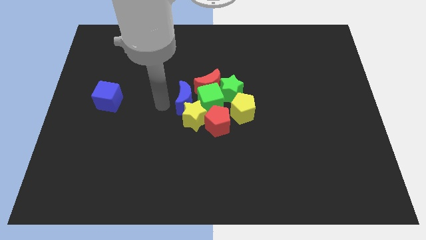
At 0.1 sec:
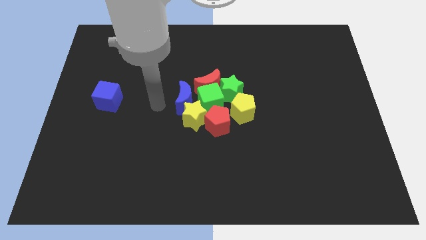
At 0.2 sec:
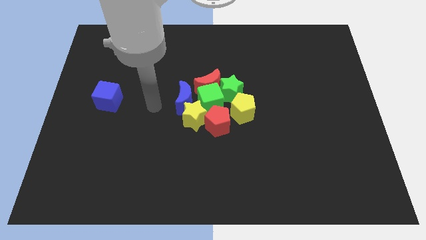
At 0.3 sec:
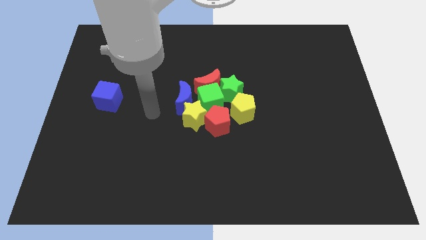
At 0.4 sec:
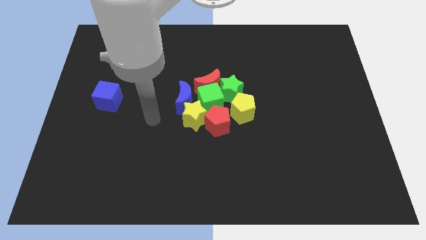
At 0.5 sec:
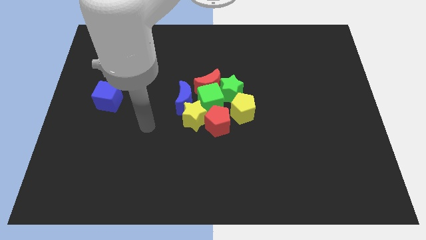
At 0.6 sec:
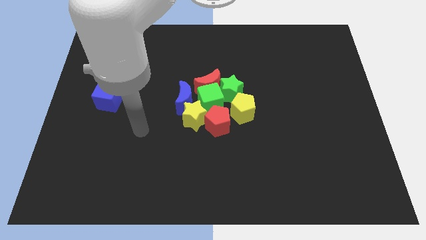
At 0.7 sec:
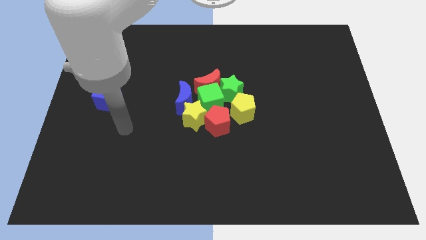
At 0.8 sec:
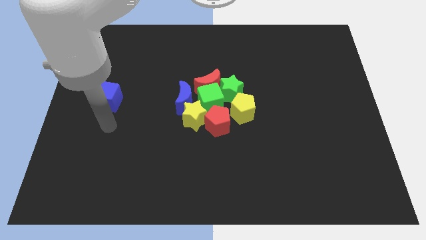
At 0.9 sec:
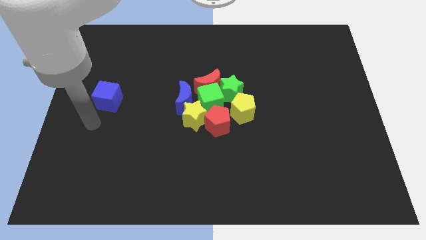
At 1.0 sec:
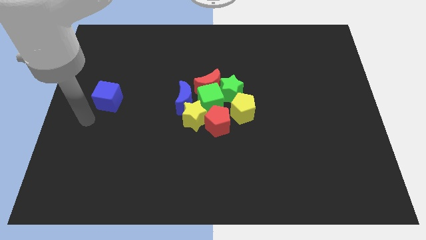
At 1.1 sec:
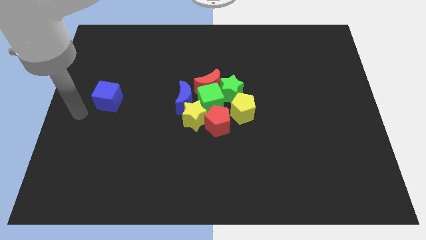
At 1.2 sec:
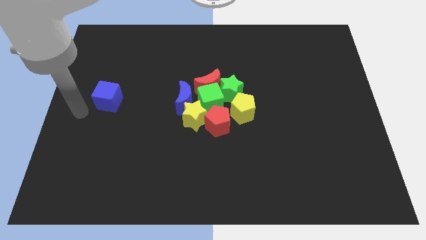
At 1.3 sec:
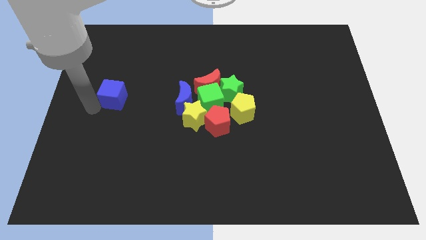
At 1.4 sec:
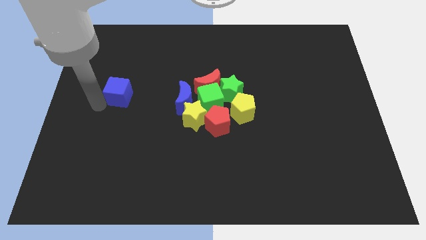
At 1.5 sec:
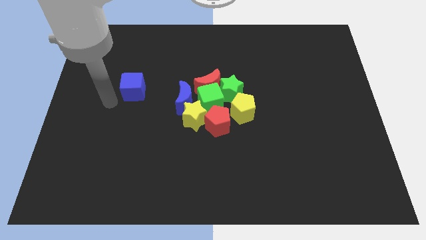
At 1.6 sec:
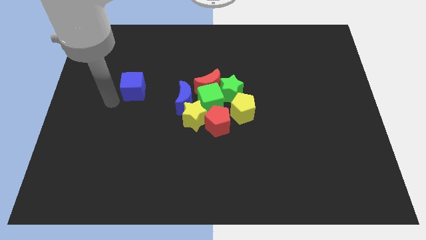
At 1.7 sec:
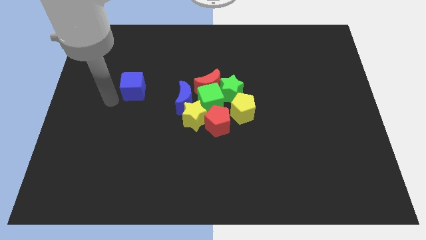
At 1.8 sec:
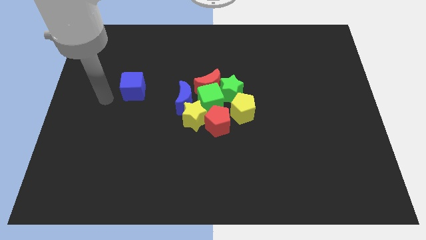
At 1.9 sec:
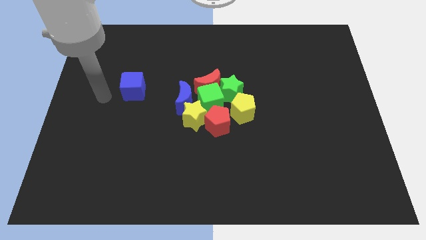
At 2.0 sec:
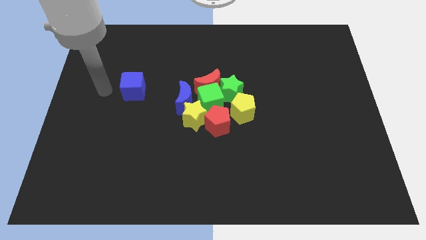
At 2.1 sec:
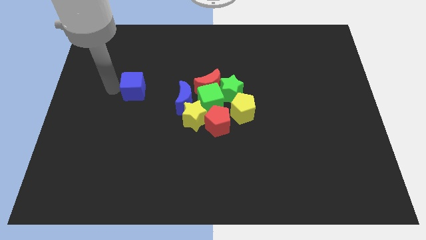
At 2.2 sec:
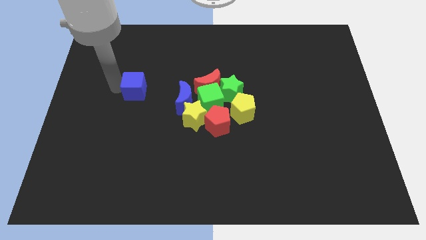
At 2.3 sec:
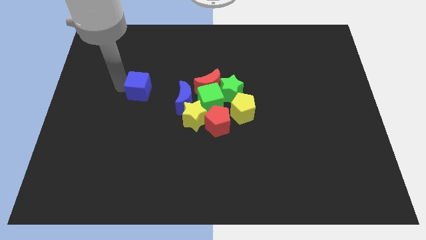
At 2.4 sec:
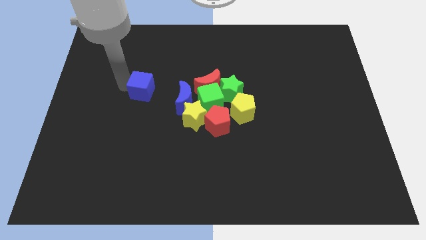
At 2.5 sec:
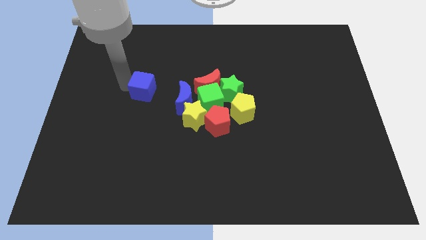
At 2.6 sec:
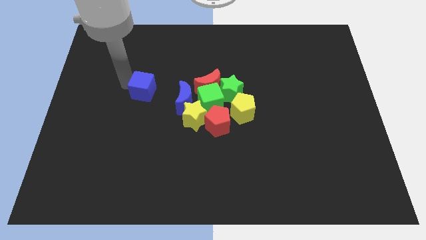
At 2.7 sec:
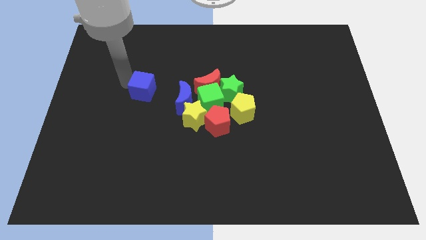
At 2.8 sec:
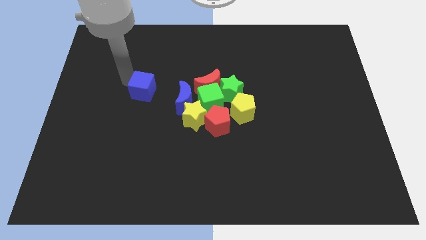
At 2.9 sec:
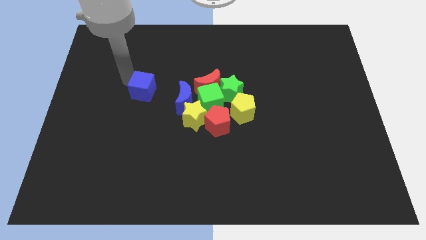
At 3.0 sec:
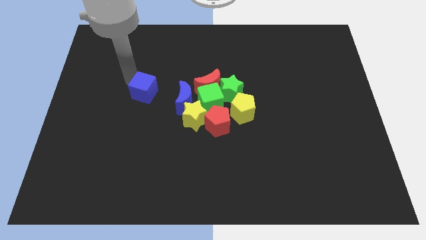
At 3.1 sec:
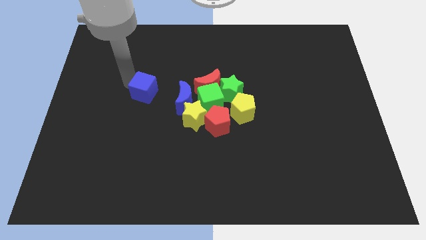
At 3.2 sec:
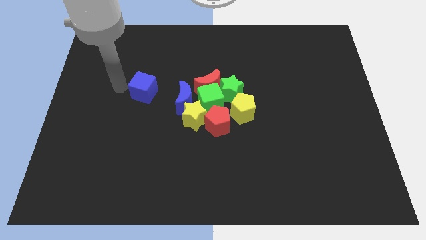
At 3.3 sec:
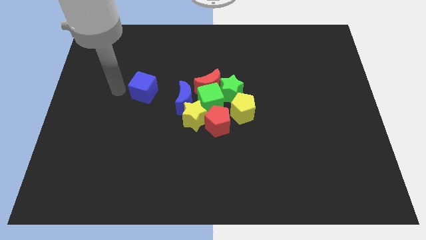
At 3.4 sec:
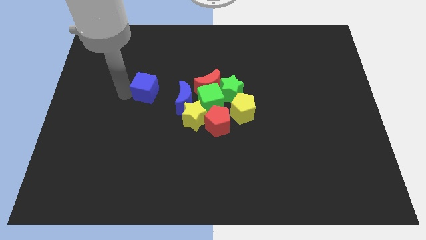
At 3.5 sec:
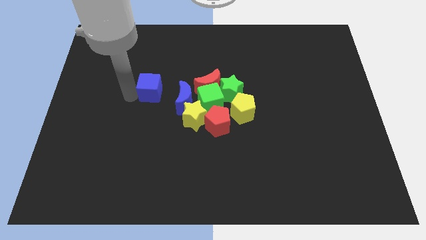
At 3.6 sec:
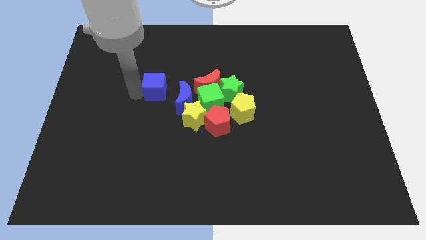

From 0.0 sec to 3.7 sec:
move blue cube towards left of blue moon

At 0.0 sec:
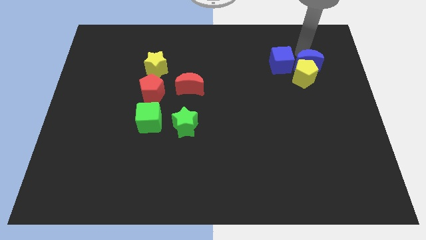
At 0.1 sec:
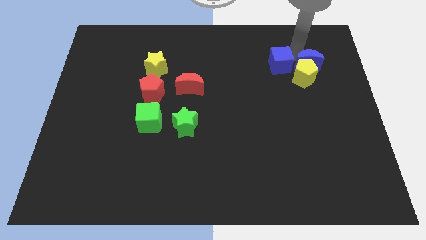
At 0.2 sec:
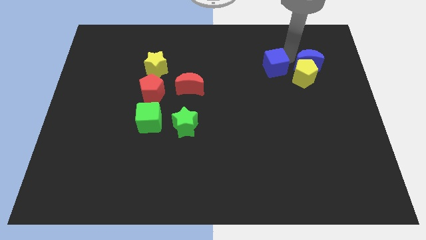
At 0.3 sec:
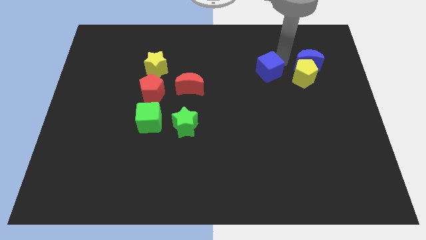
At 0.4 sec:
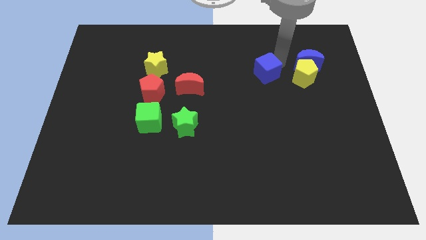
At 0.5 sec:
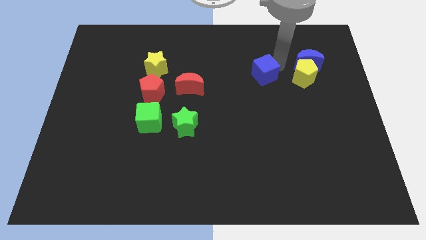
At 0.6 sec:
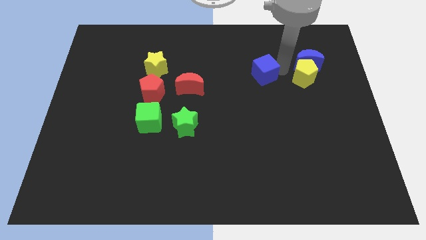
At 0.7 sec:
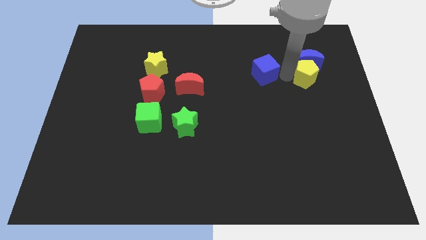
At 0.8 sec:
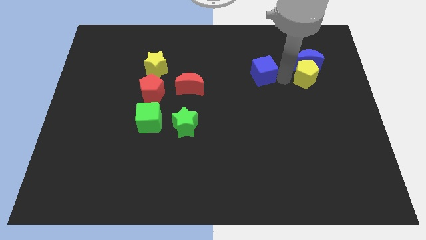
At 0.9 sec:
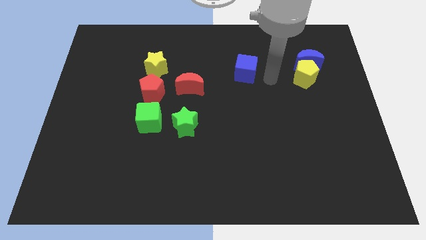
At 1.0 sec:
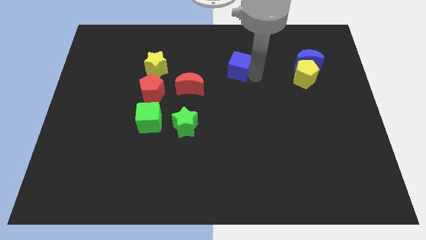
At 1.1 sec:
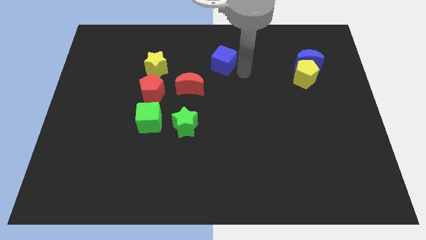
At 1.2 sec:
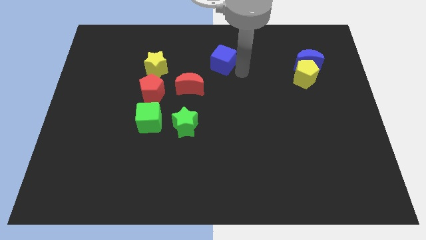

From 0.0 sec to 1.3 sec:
move the blue cube away from the blue crescent

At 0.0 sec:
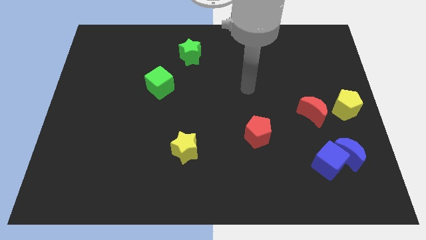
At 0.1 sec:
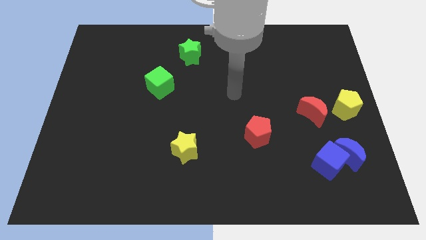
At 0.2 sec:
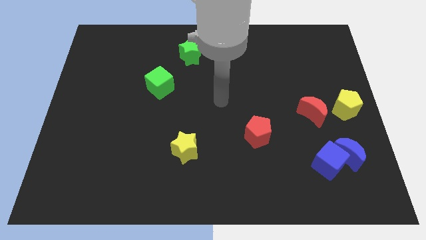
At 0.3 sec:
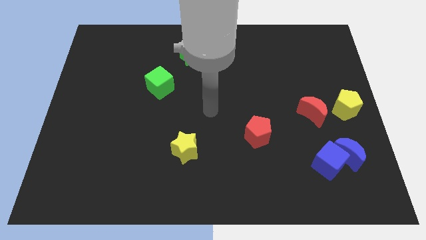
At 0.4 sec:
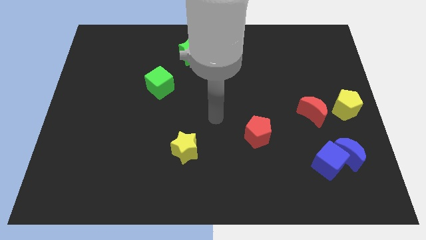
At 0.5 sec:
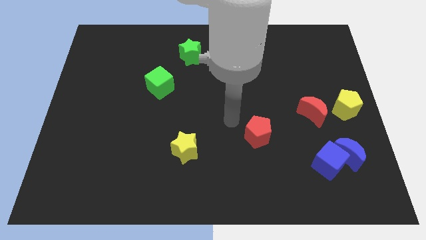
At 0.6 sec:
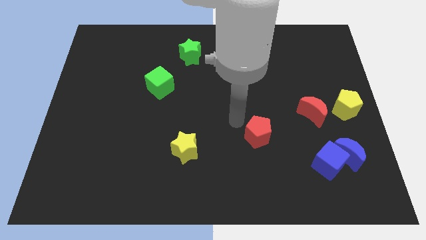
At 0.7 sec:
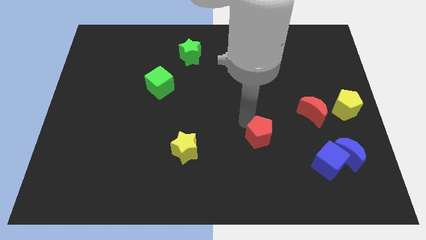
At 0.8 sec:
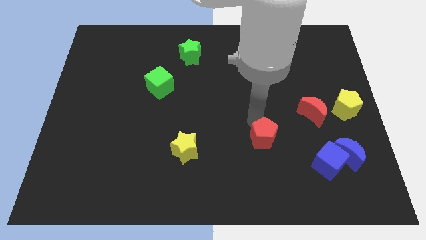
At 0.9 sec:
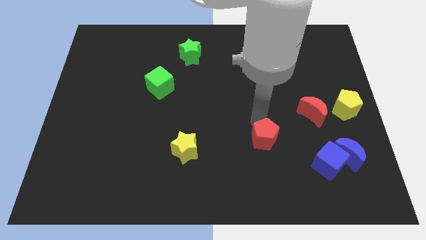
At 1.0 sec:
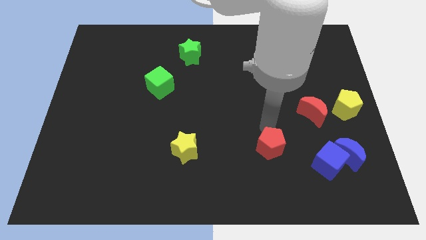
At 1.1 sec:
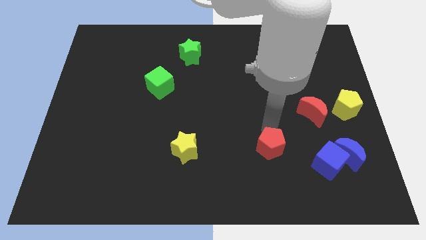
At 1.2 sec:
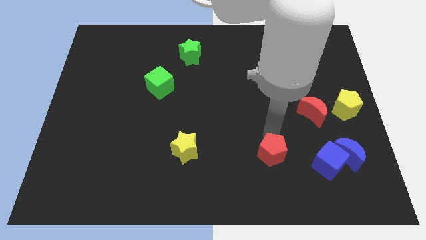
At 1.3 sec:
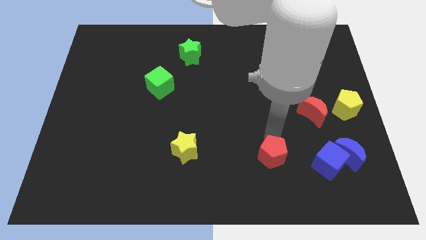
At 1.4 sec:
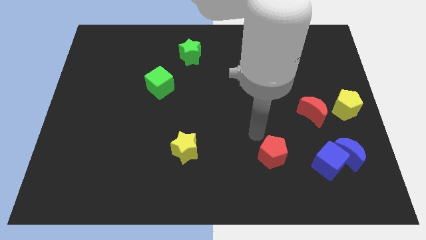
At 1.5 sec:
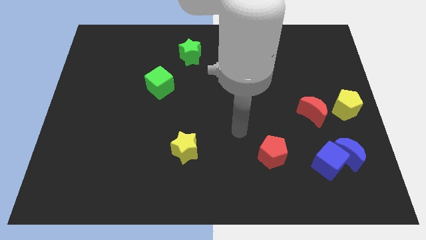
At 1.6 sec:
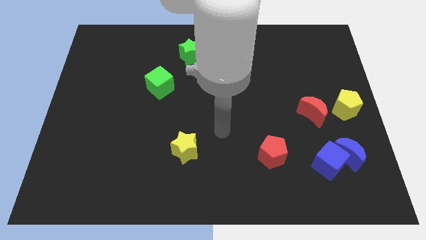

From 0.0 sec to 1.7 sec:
push the red pentagon downward

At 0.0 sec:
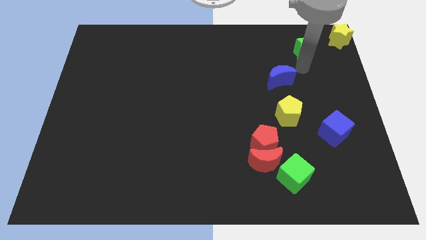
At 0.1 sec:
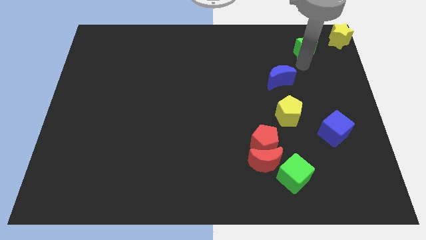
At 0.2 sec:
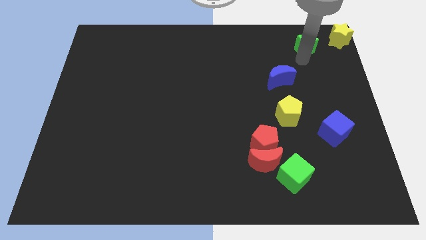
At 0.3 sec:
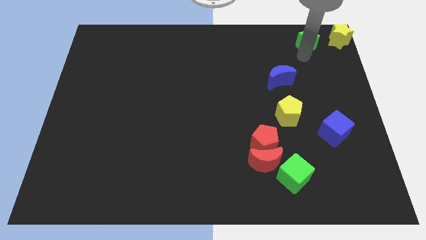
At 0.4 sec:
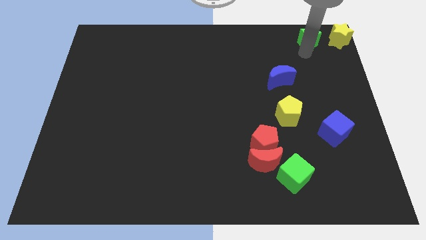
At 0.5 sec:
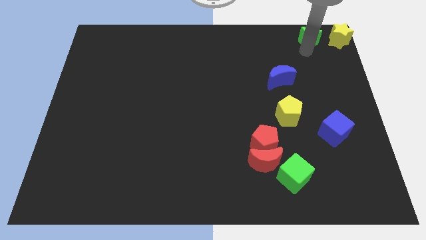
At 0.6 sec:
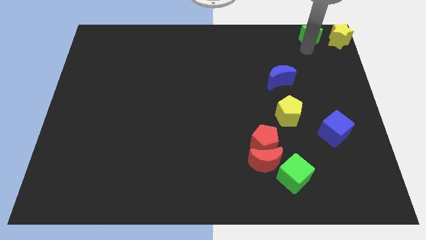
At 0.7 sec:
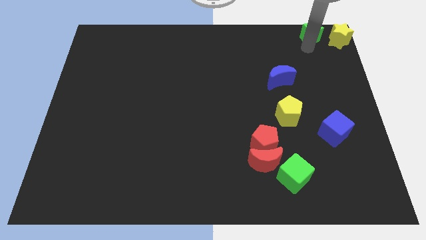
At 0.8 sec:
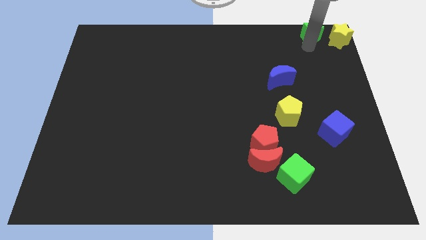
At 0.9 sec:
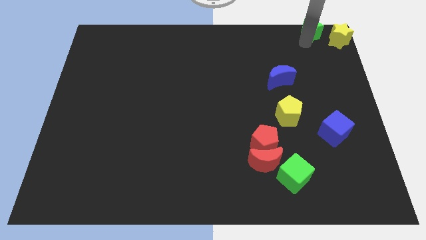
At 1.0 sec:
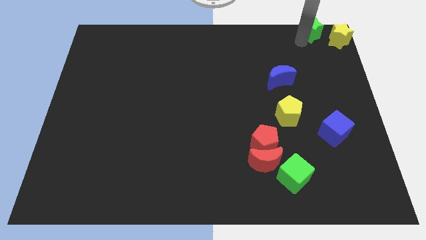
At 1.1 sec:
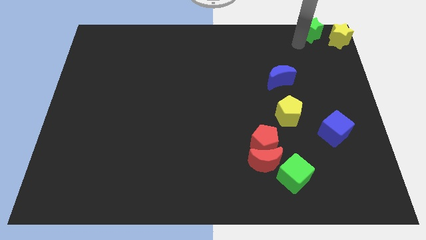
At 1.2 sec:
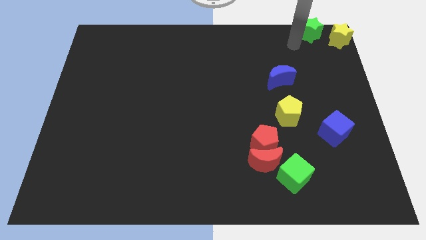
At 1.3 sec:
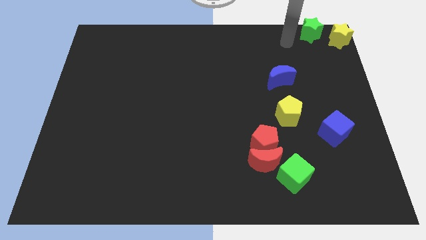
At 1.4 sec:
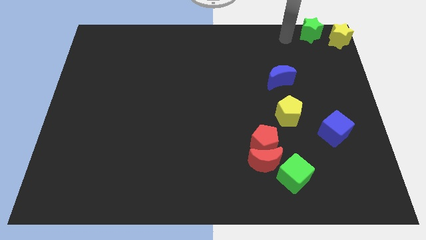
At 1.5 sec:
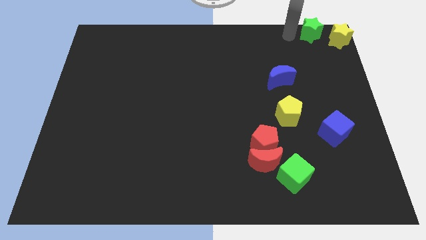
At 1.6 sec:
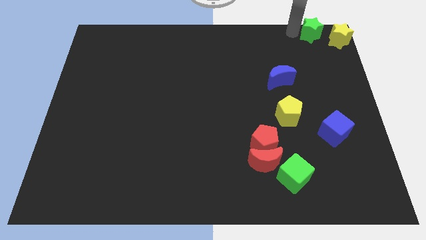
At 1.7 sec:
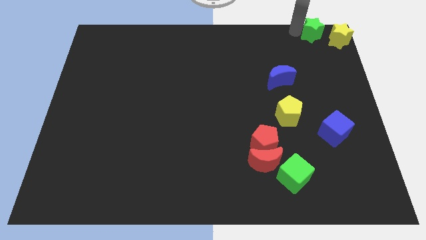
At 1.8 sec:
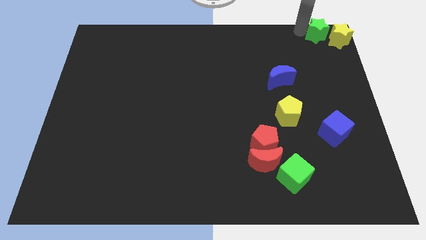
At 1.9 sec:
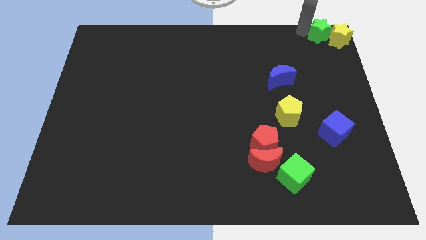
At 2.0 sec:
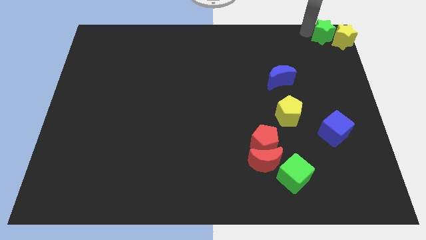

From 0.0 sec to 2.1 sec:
move green star to the top right
